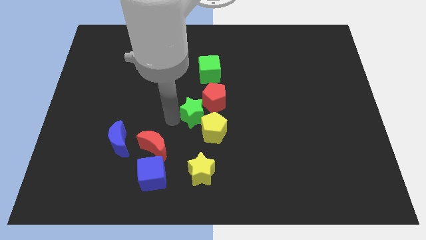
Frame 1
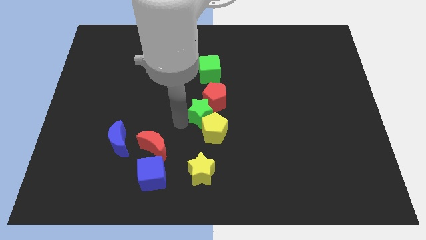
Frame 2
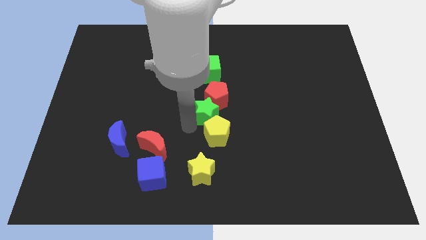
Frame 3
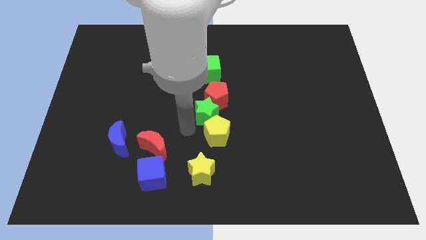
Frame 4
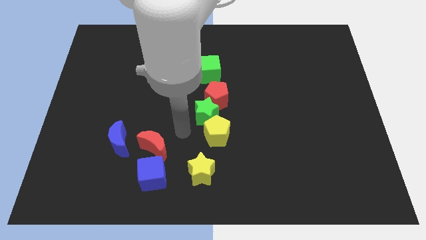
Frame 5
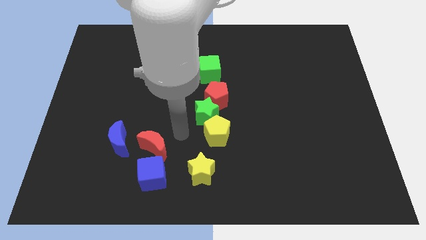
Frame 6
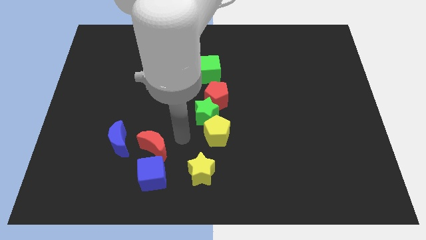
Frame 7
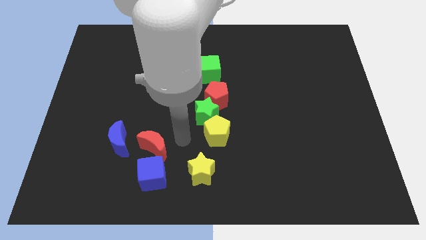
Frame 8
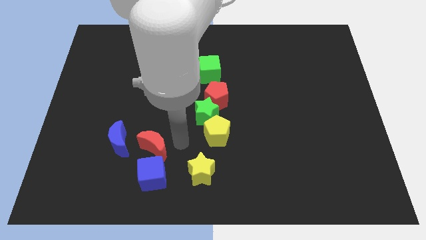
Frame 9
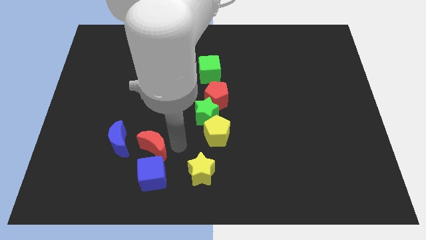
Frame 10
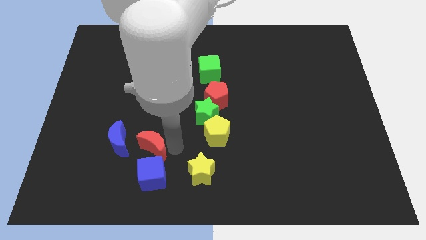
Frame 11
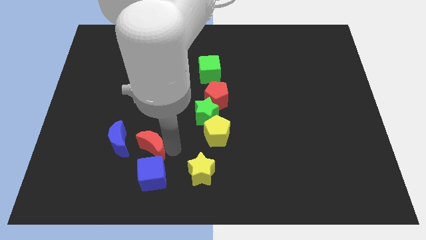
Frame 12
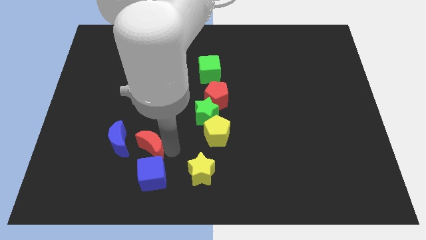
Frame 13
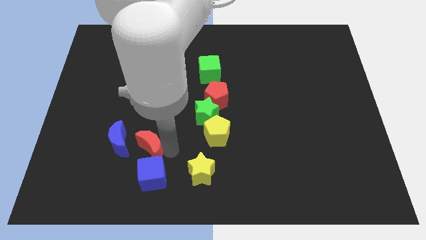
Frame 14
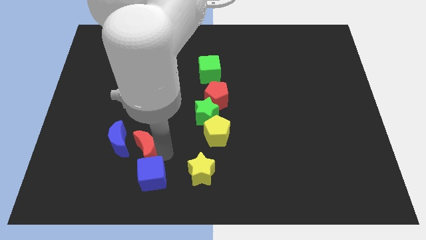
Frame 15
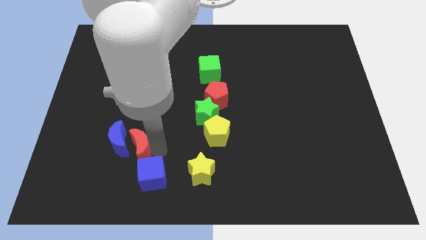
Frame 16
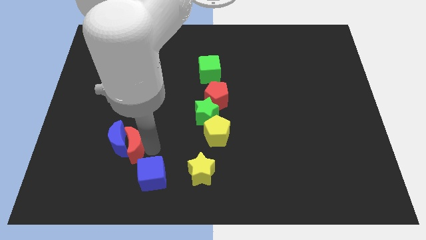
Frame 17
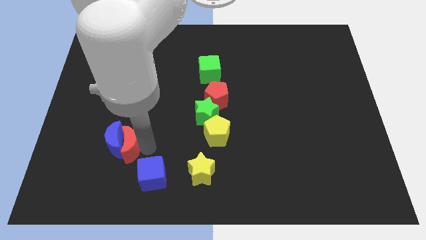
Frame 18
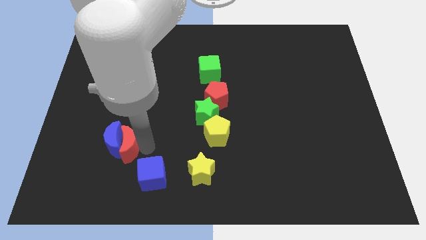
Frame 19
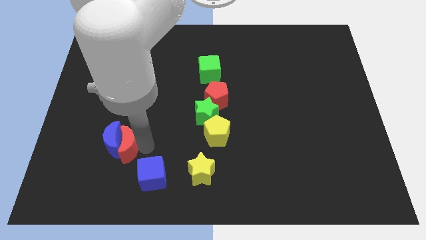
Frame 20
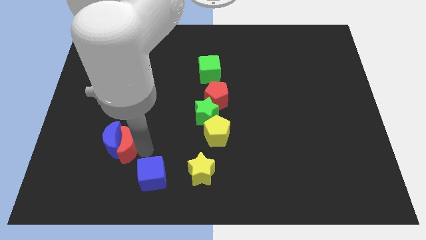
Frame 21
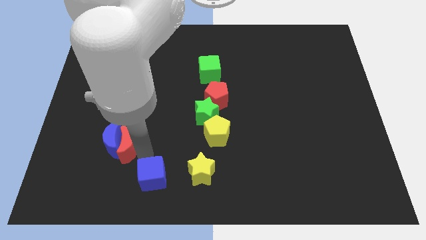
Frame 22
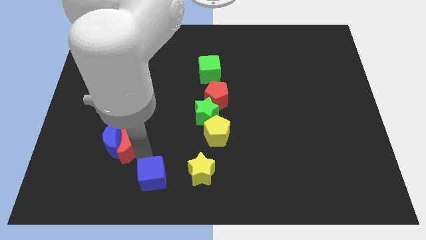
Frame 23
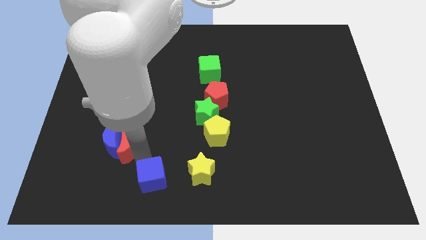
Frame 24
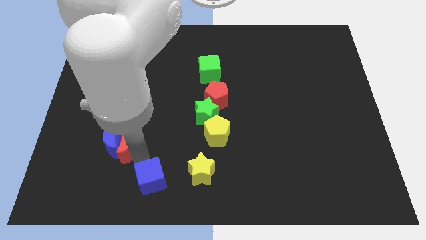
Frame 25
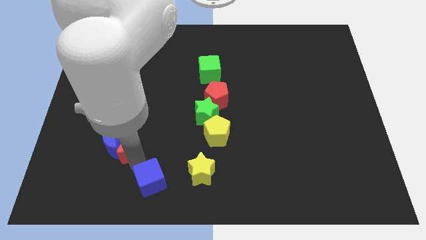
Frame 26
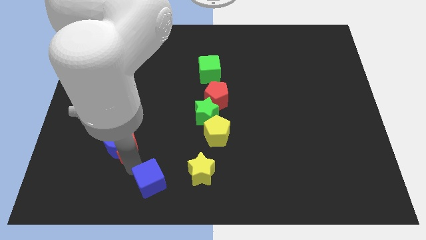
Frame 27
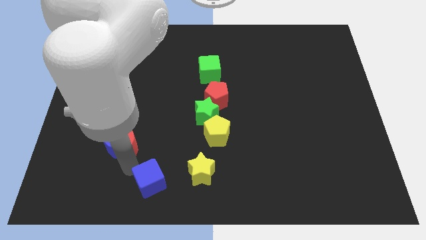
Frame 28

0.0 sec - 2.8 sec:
push red moon in to blue moon

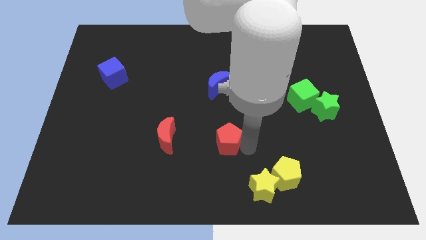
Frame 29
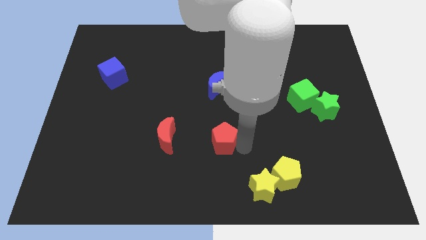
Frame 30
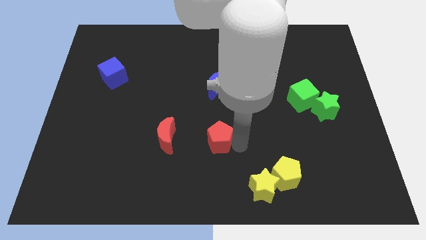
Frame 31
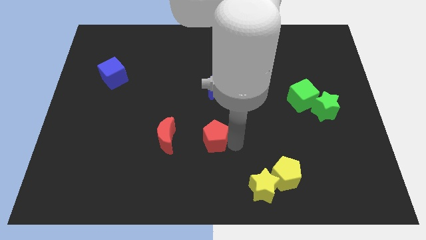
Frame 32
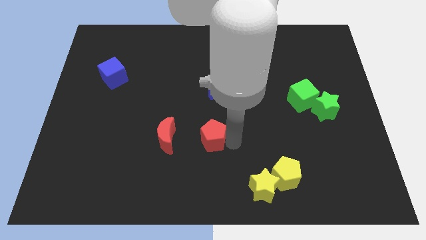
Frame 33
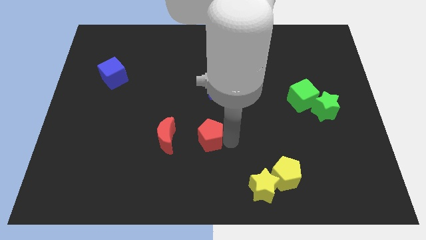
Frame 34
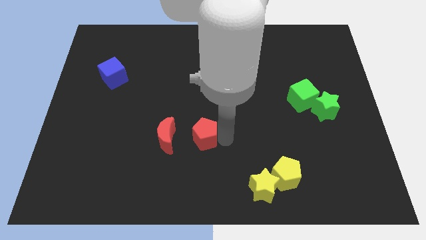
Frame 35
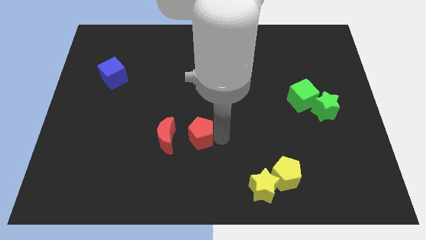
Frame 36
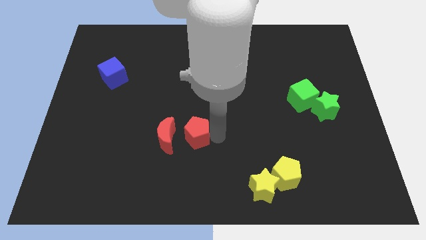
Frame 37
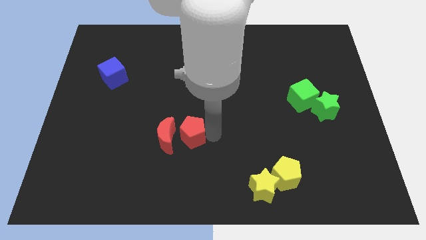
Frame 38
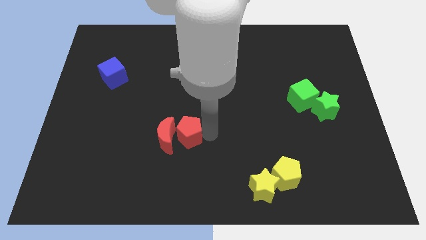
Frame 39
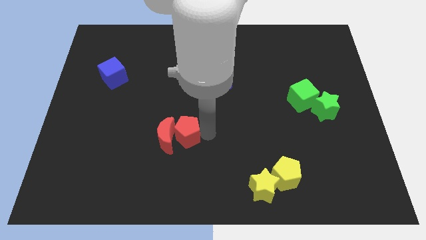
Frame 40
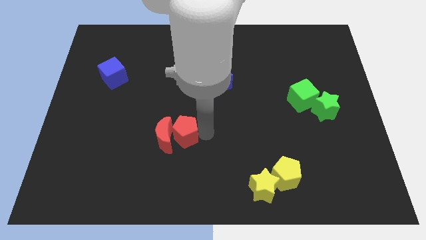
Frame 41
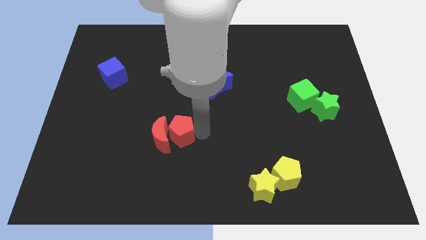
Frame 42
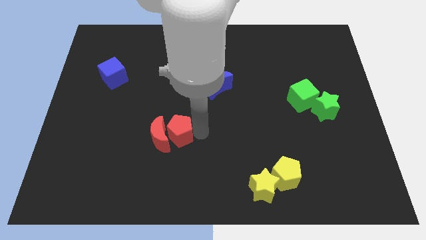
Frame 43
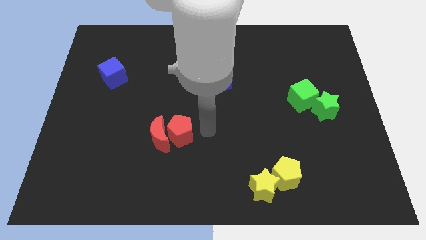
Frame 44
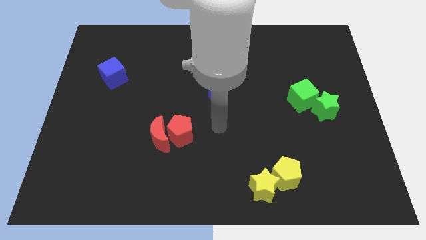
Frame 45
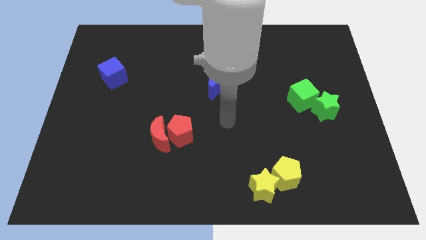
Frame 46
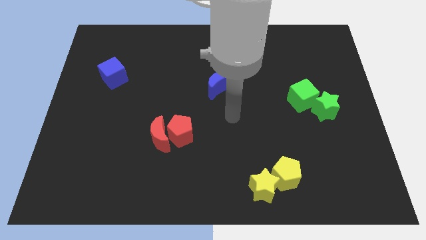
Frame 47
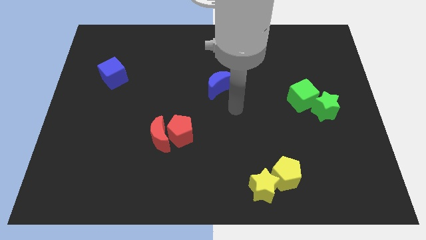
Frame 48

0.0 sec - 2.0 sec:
push the red pentagon into red crescent

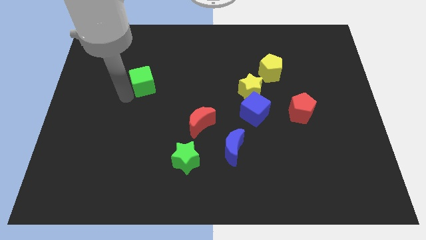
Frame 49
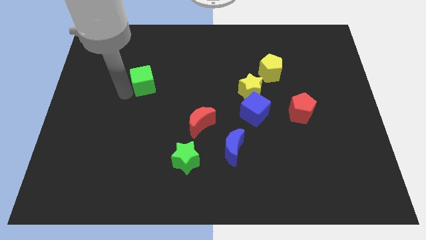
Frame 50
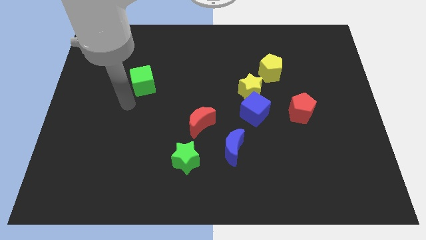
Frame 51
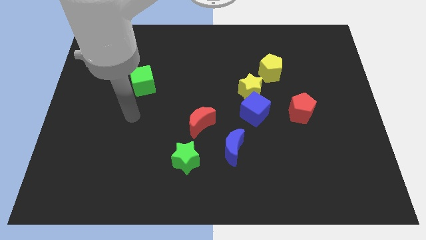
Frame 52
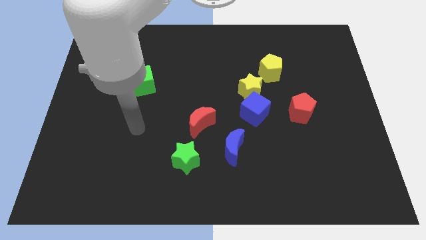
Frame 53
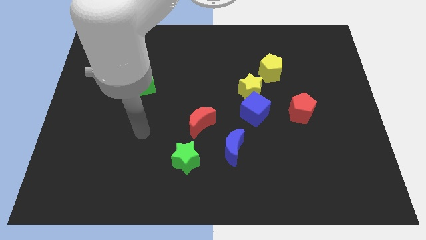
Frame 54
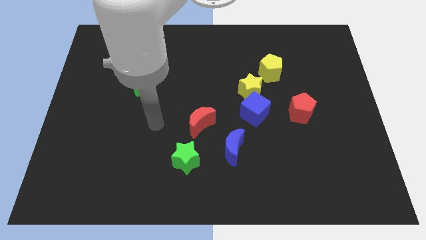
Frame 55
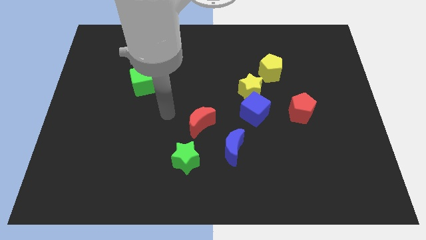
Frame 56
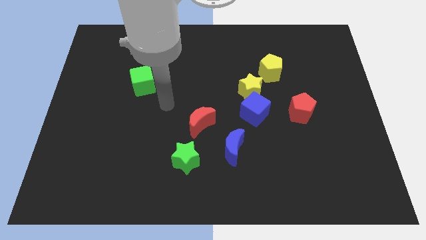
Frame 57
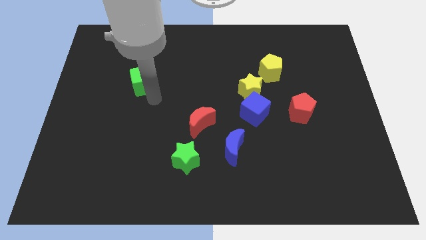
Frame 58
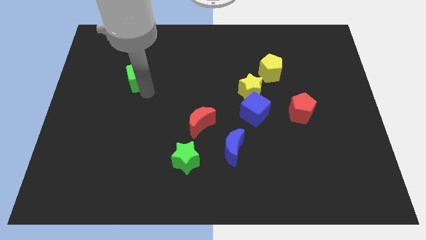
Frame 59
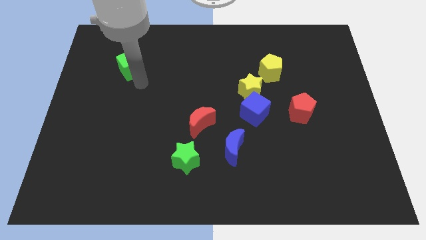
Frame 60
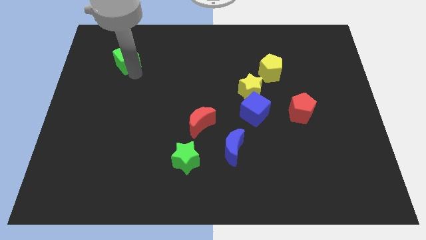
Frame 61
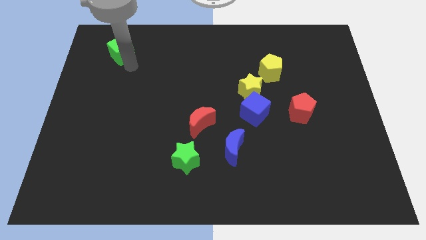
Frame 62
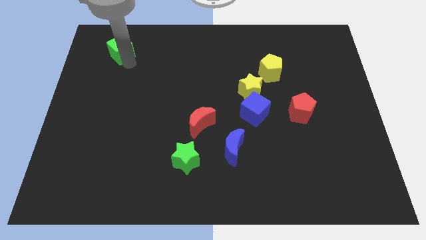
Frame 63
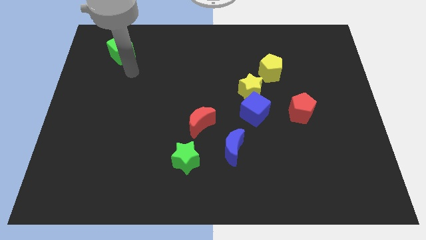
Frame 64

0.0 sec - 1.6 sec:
drag the green cube to the top left side of the board

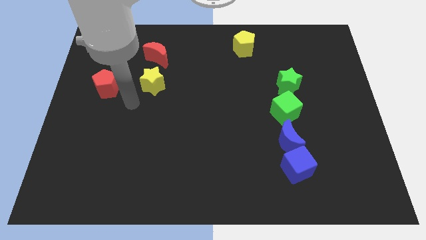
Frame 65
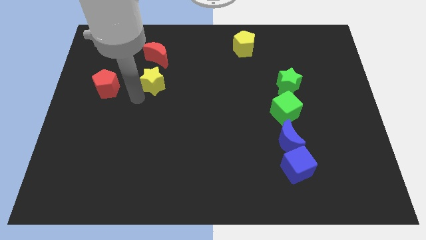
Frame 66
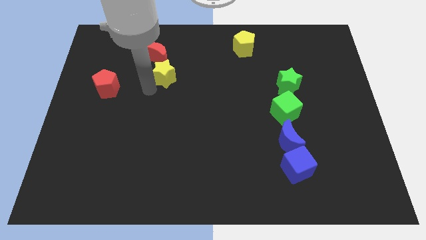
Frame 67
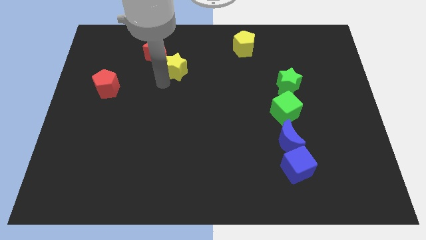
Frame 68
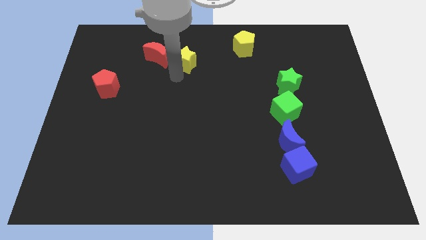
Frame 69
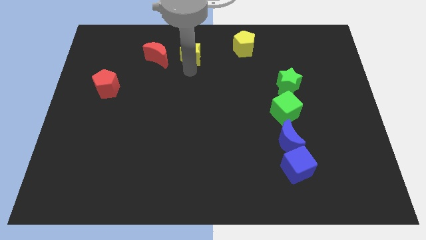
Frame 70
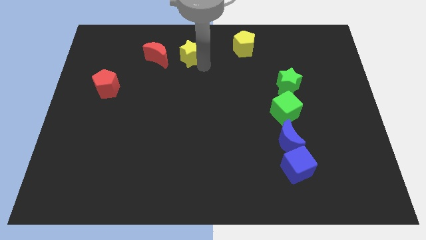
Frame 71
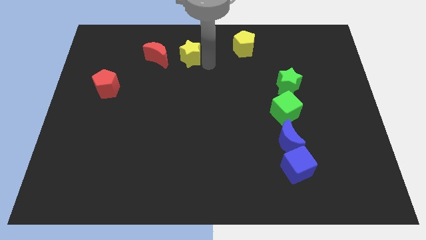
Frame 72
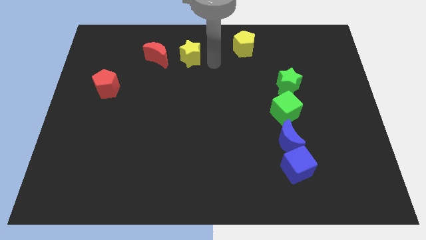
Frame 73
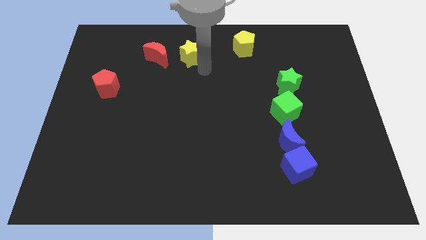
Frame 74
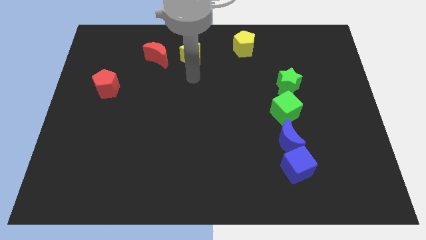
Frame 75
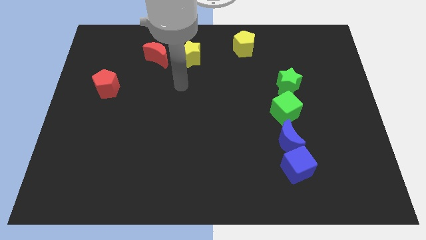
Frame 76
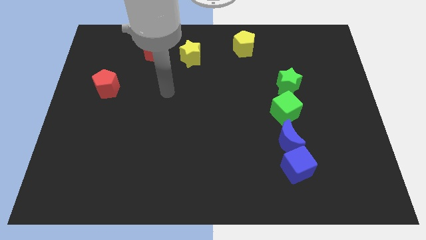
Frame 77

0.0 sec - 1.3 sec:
place the yellow star in between red crescent and yellow pentagon

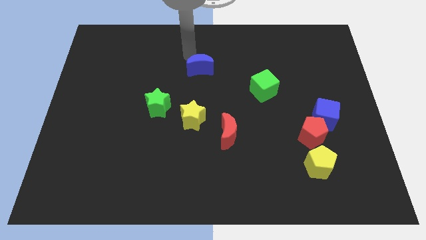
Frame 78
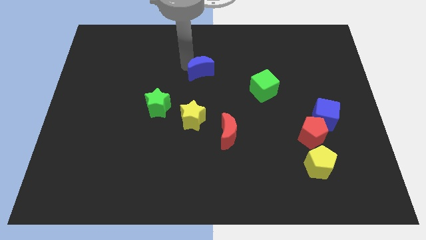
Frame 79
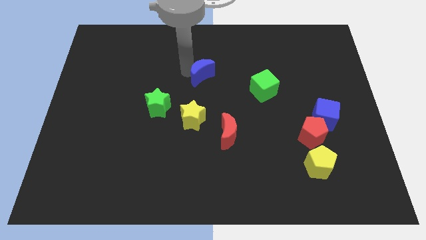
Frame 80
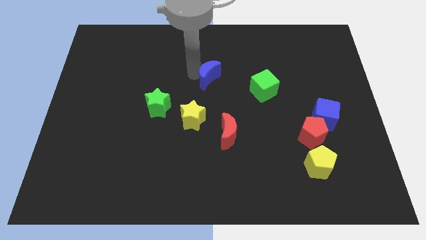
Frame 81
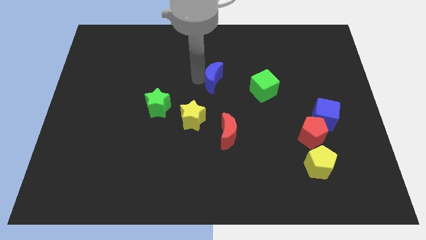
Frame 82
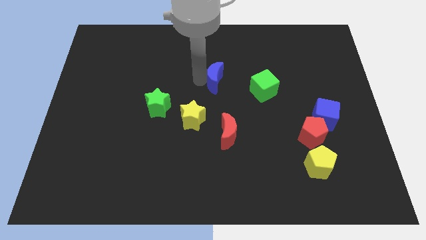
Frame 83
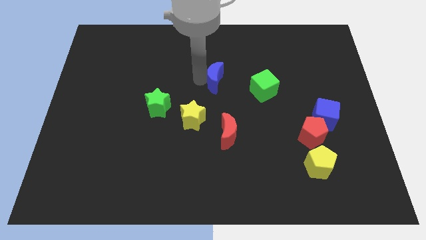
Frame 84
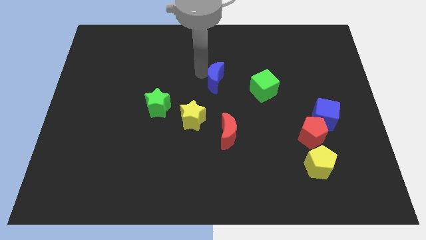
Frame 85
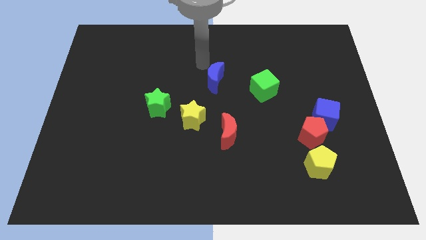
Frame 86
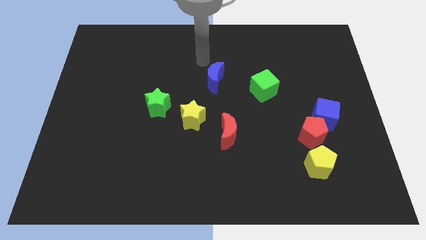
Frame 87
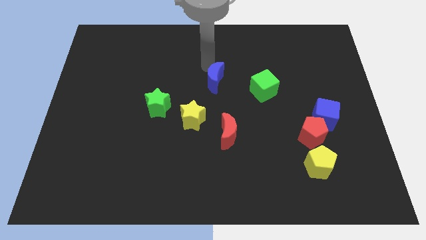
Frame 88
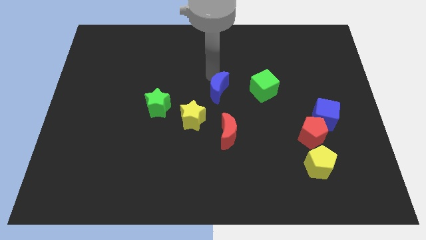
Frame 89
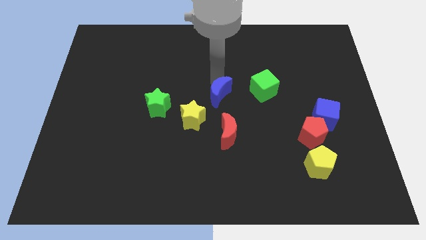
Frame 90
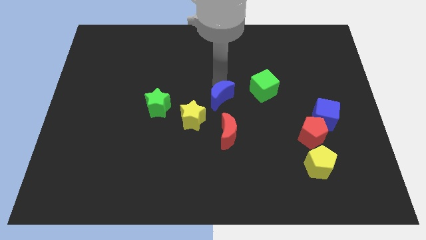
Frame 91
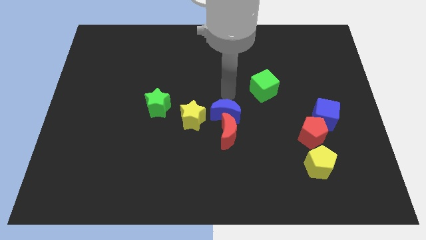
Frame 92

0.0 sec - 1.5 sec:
push the blue moon to the top of the red moon
